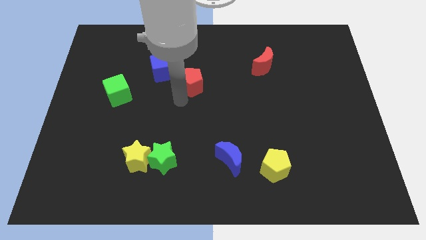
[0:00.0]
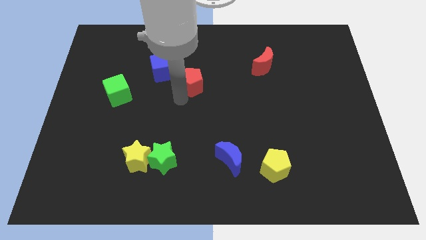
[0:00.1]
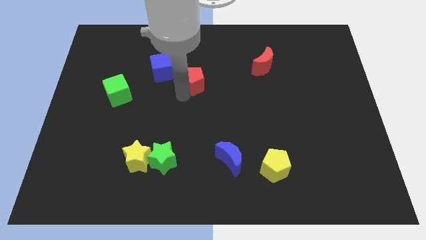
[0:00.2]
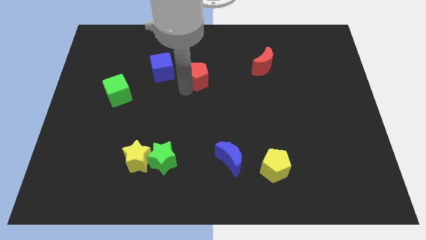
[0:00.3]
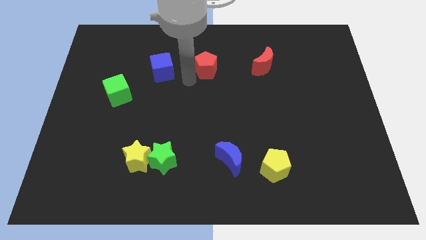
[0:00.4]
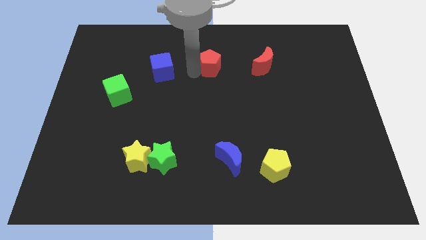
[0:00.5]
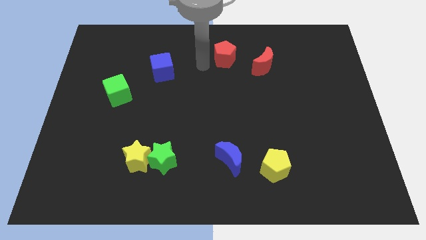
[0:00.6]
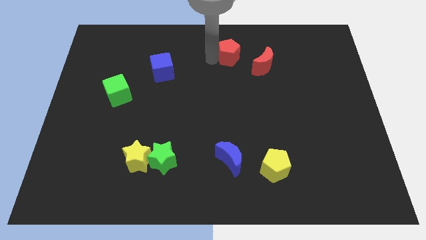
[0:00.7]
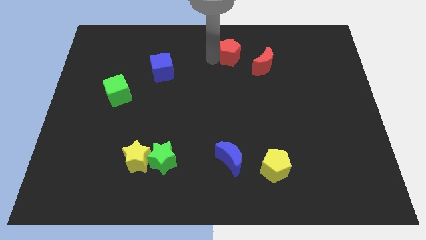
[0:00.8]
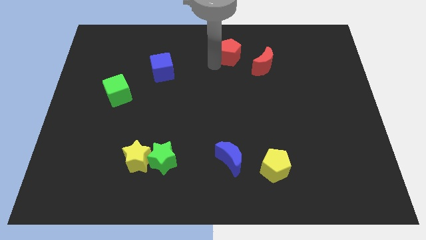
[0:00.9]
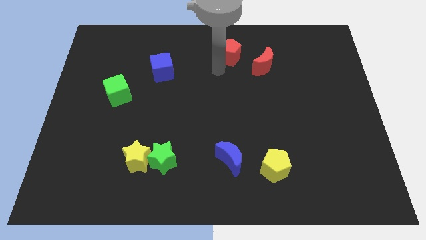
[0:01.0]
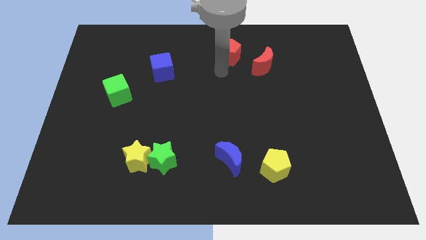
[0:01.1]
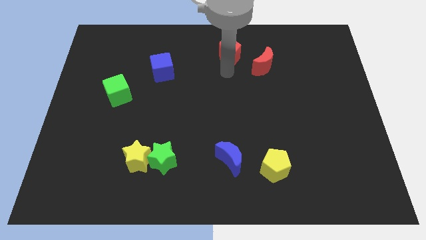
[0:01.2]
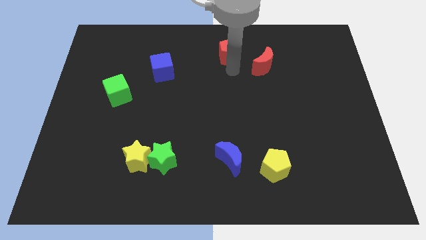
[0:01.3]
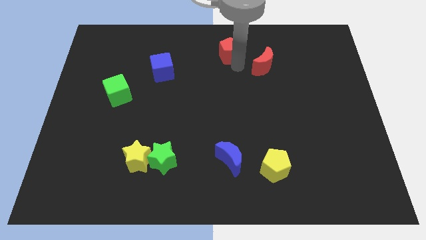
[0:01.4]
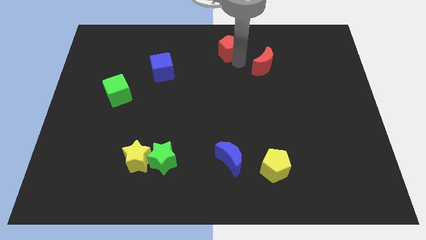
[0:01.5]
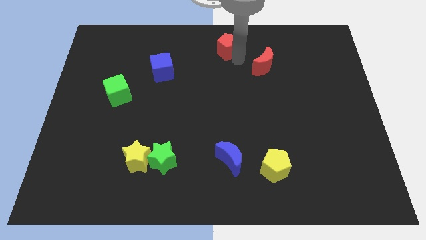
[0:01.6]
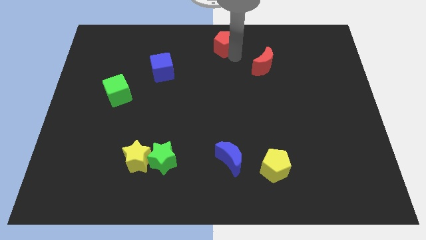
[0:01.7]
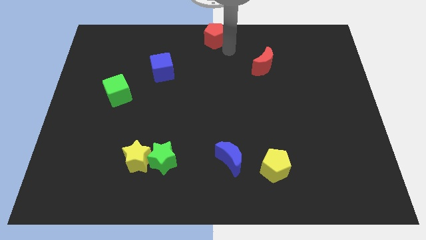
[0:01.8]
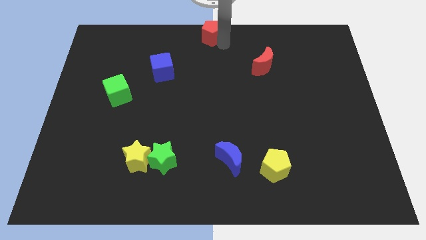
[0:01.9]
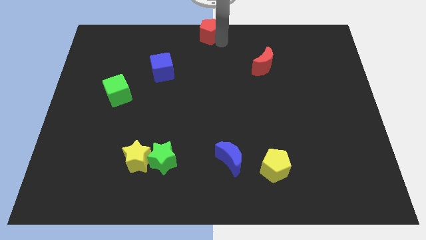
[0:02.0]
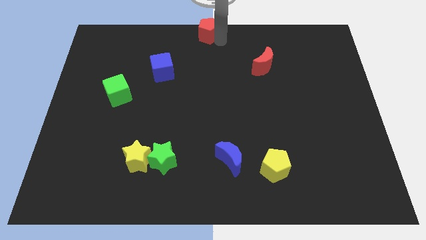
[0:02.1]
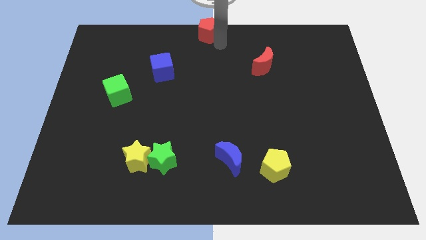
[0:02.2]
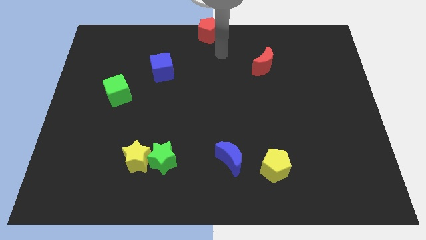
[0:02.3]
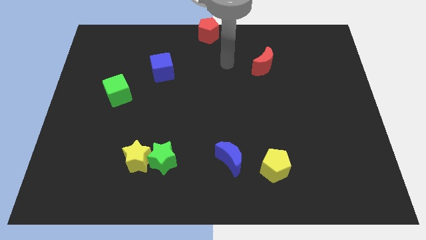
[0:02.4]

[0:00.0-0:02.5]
move red pentagon to center top

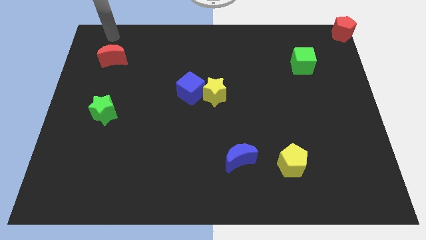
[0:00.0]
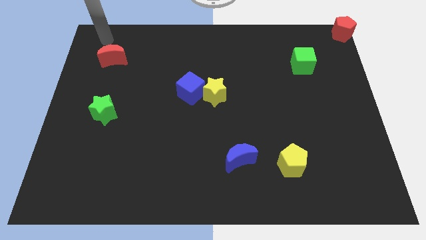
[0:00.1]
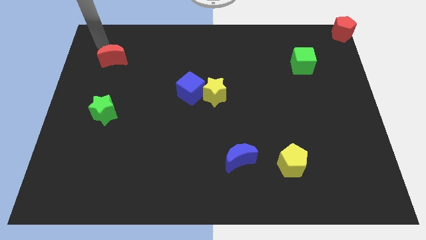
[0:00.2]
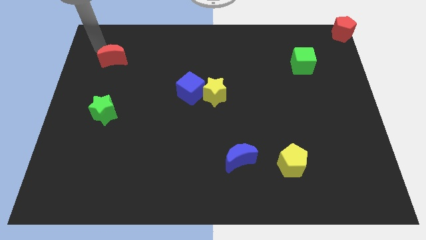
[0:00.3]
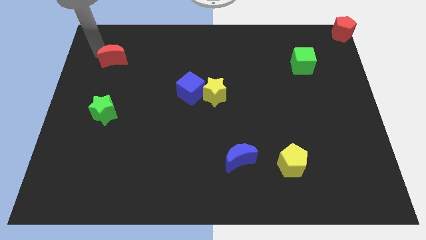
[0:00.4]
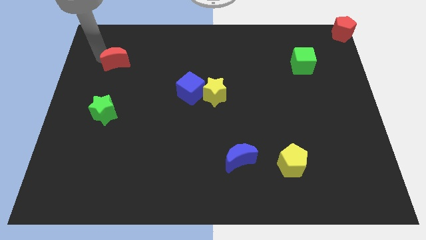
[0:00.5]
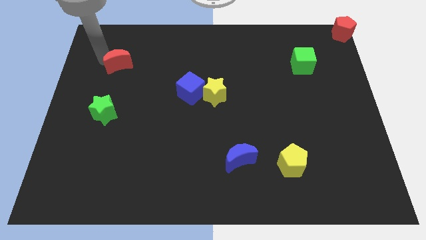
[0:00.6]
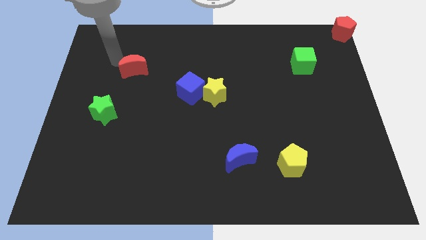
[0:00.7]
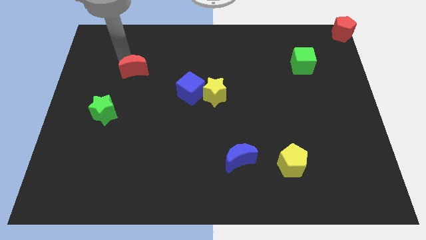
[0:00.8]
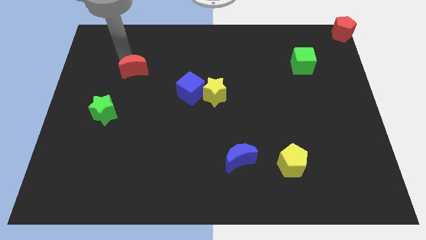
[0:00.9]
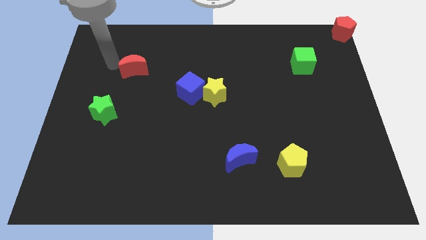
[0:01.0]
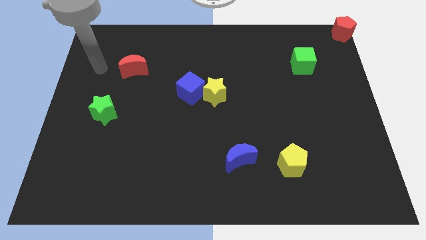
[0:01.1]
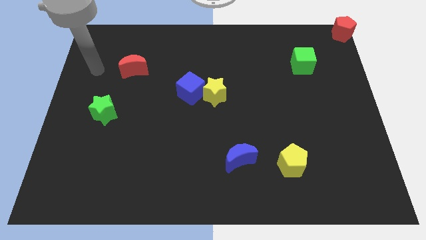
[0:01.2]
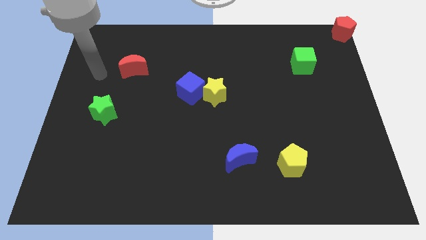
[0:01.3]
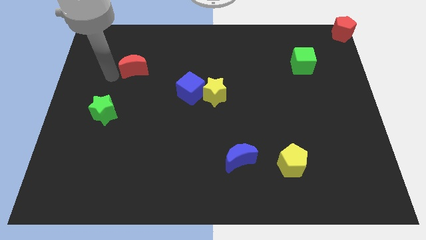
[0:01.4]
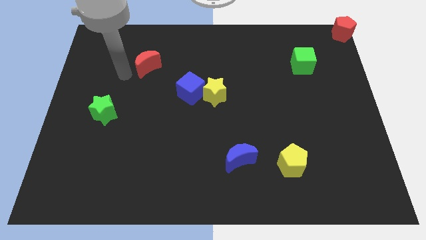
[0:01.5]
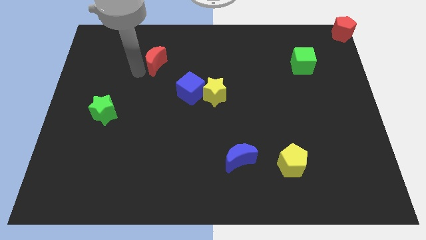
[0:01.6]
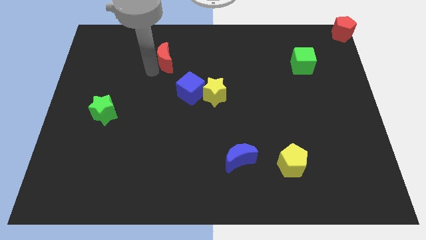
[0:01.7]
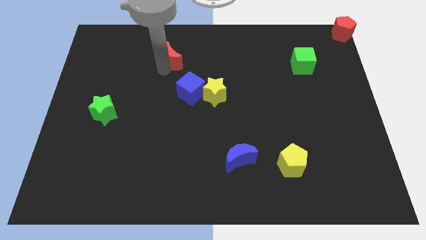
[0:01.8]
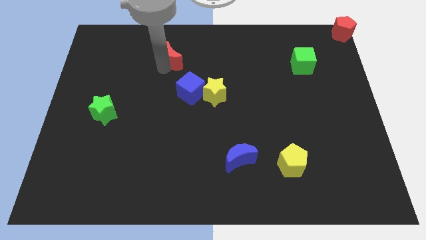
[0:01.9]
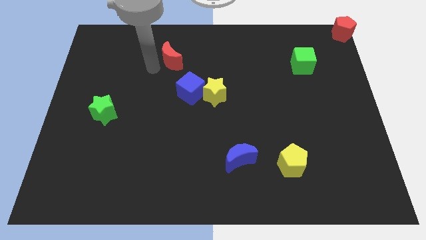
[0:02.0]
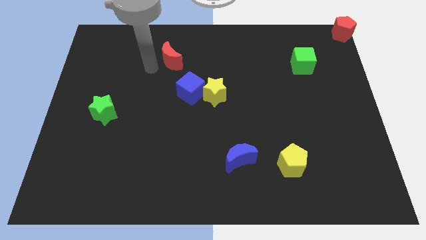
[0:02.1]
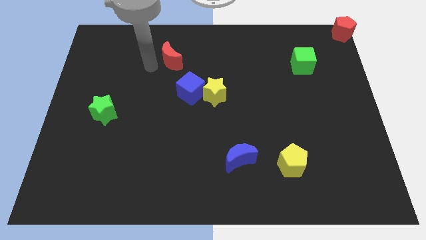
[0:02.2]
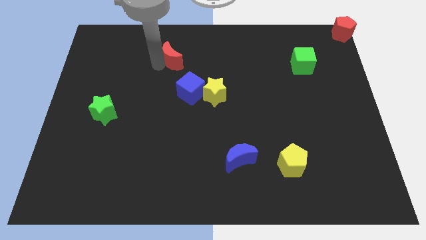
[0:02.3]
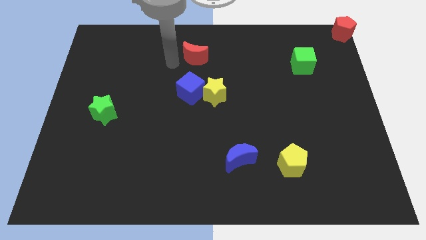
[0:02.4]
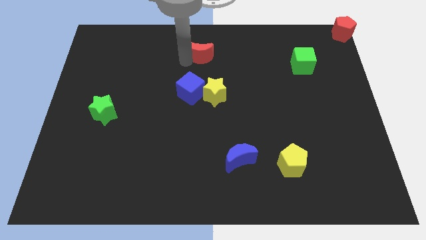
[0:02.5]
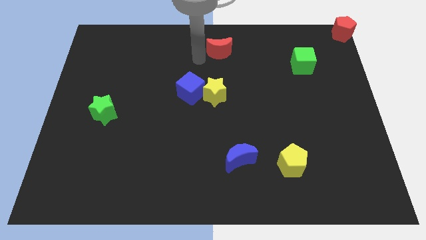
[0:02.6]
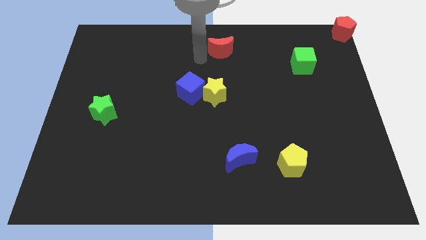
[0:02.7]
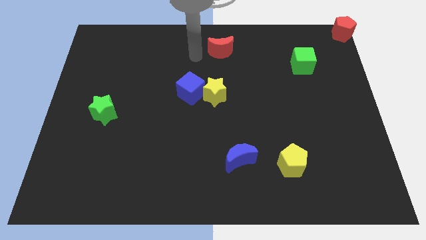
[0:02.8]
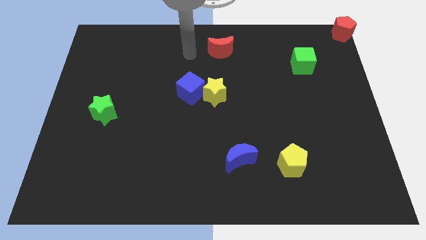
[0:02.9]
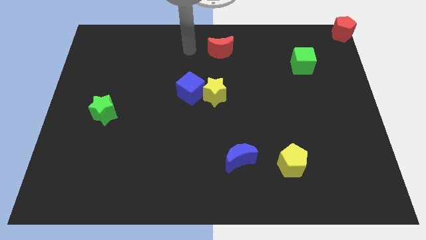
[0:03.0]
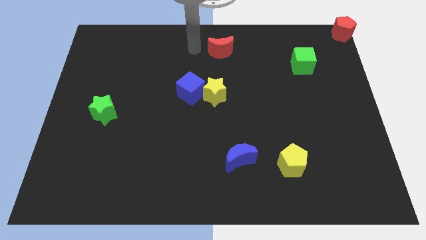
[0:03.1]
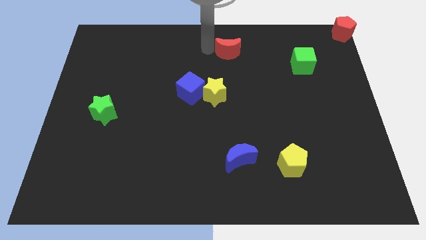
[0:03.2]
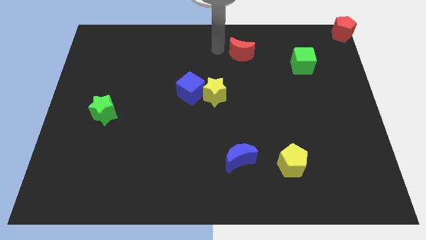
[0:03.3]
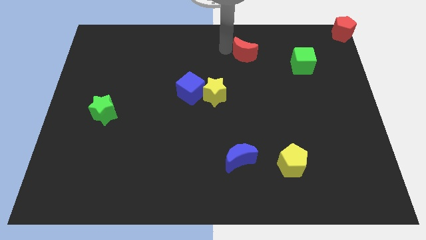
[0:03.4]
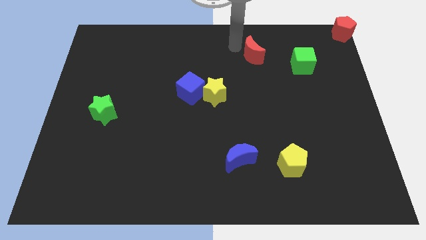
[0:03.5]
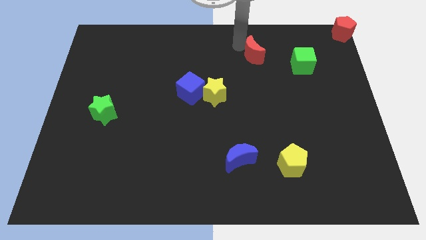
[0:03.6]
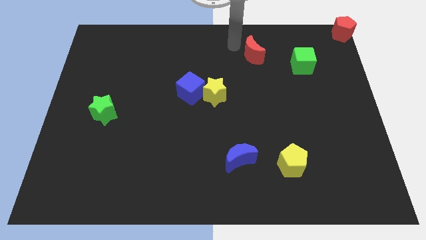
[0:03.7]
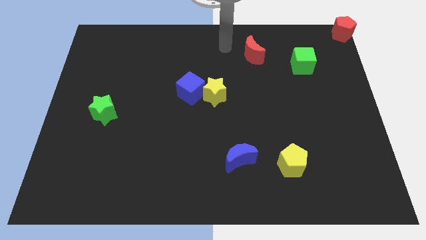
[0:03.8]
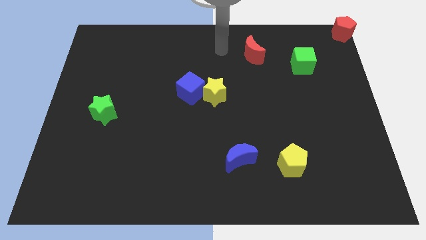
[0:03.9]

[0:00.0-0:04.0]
move the red moon towards the right side

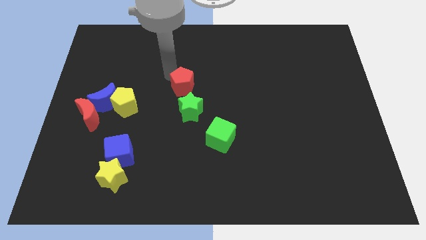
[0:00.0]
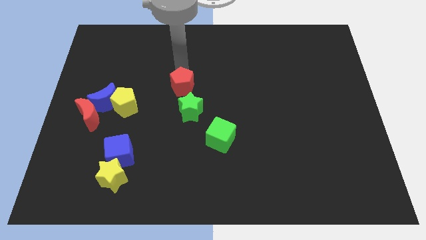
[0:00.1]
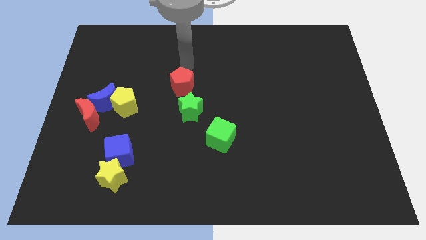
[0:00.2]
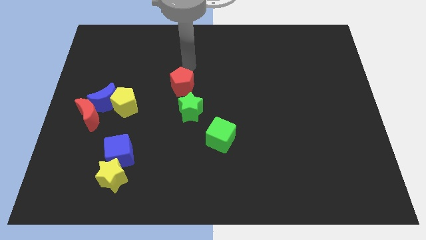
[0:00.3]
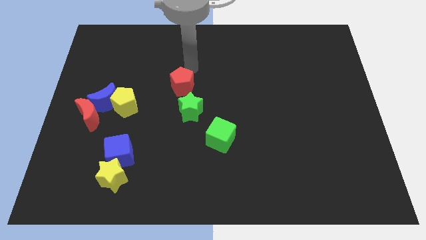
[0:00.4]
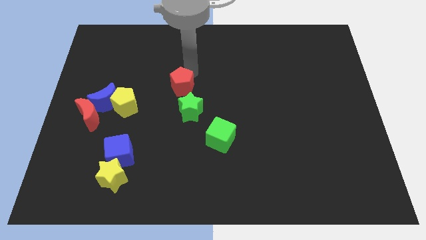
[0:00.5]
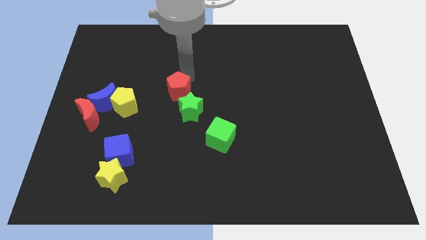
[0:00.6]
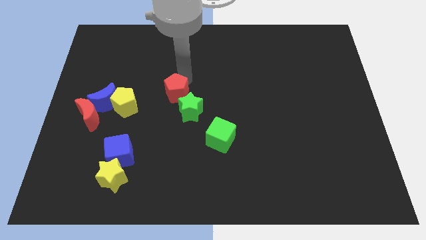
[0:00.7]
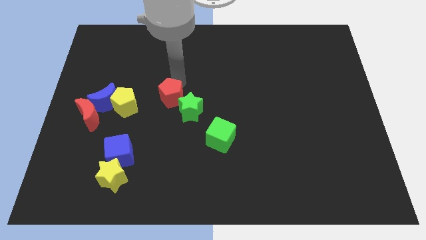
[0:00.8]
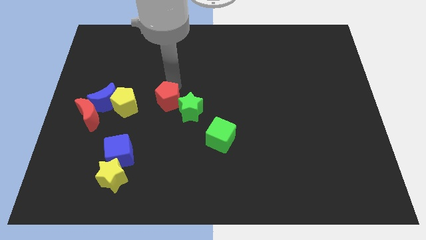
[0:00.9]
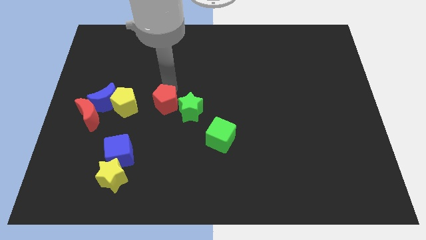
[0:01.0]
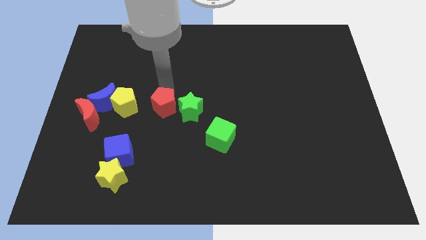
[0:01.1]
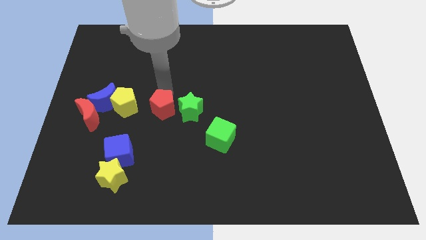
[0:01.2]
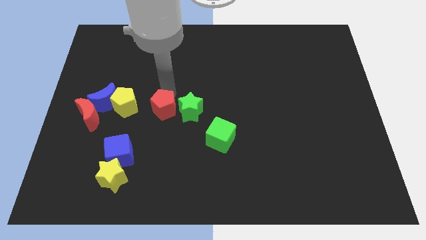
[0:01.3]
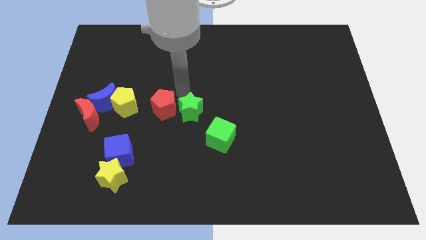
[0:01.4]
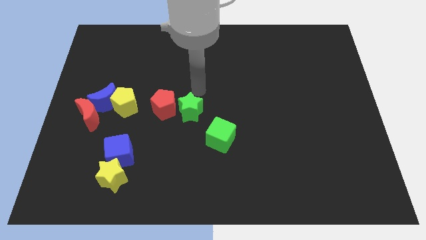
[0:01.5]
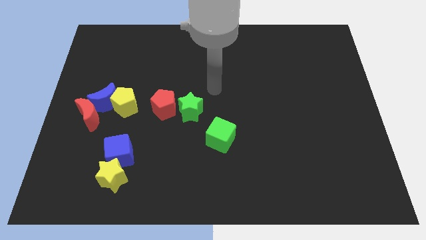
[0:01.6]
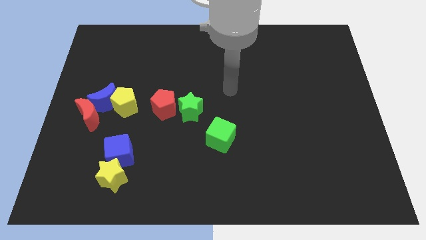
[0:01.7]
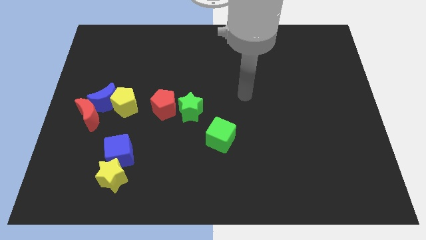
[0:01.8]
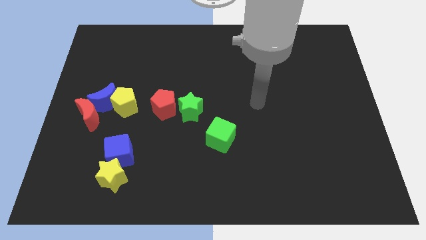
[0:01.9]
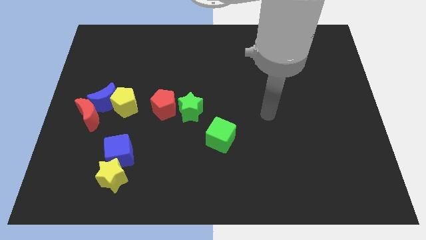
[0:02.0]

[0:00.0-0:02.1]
push the red pentagon to the left of the green star

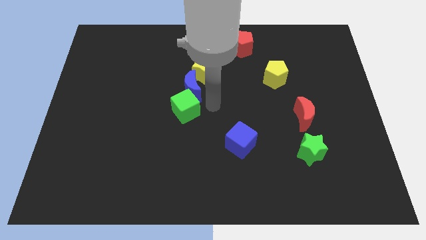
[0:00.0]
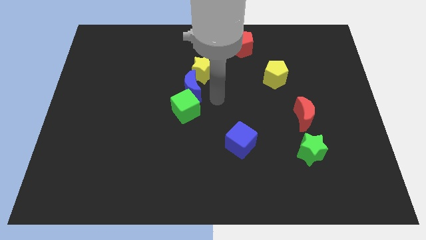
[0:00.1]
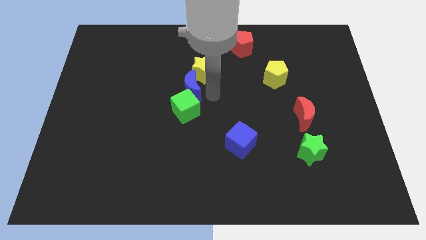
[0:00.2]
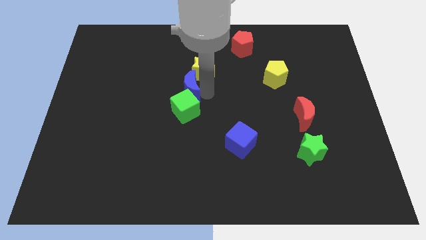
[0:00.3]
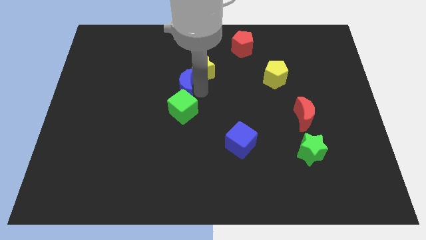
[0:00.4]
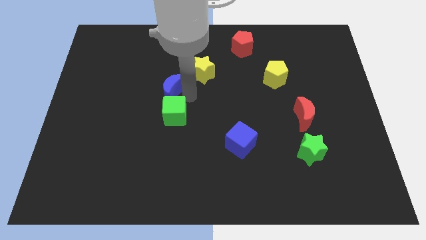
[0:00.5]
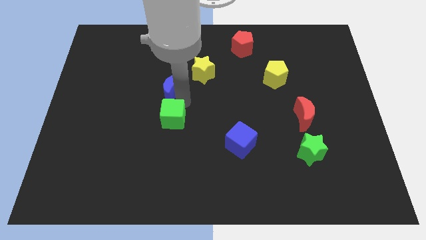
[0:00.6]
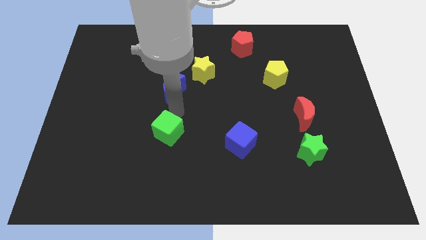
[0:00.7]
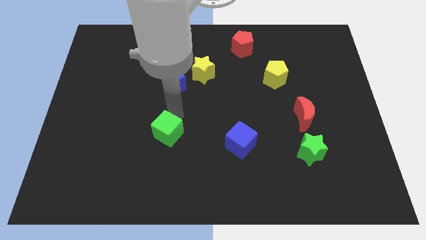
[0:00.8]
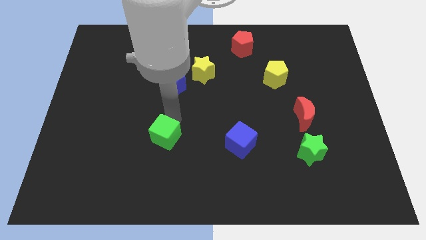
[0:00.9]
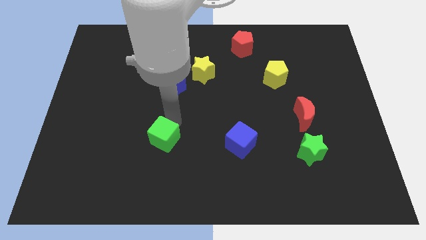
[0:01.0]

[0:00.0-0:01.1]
slide green cube down to the left of blue cube
